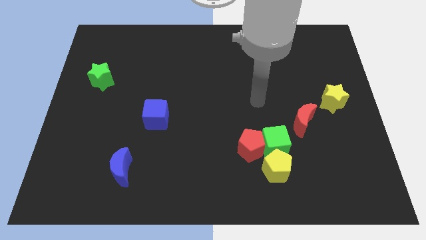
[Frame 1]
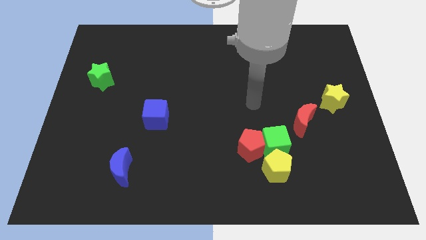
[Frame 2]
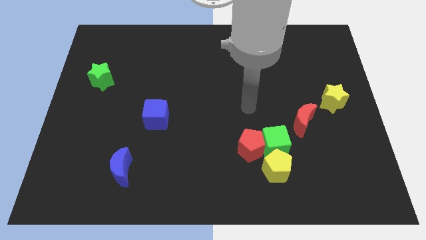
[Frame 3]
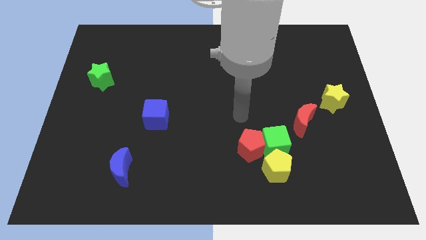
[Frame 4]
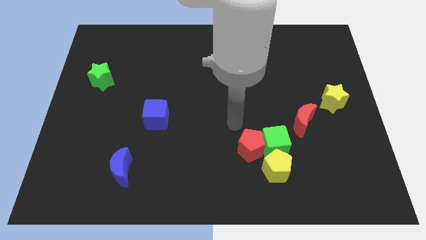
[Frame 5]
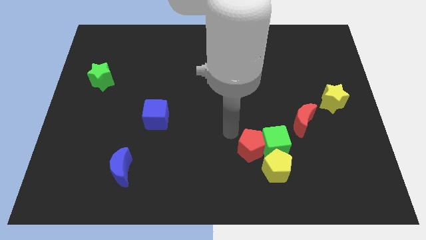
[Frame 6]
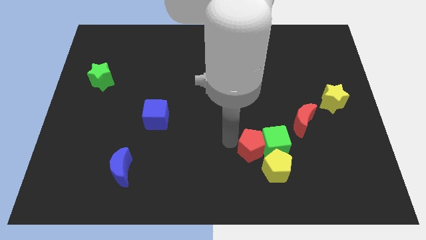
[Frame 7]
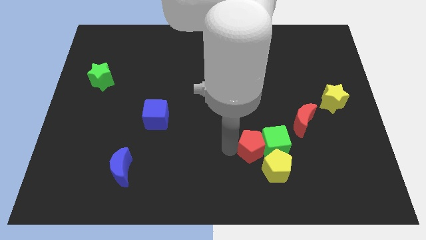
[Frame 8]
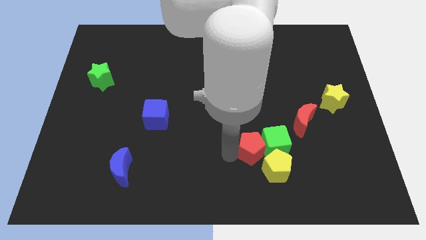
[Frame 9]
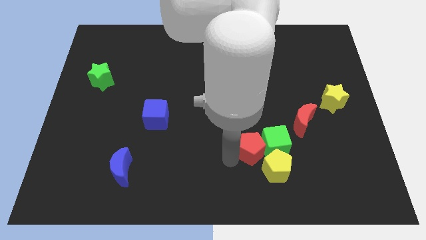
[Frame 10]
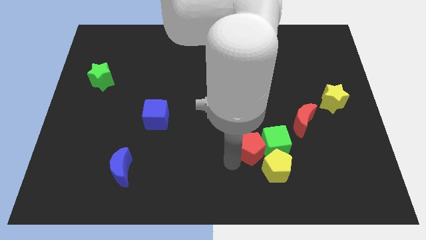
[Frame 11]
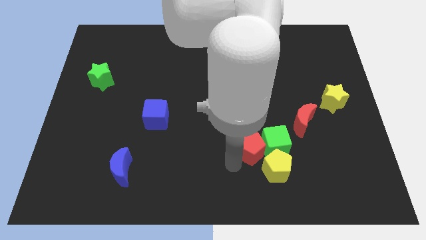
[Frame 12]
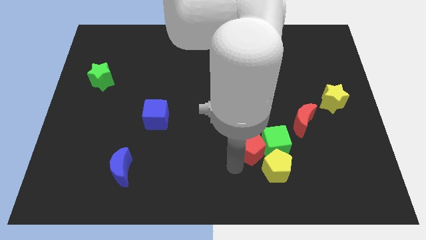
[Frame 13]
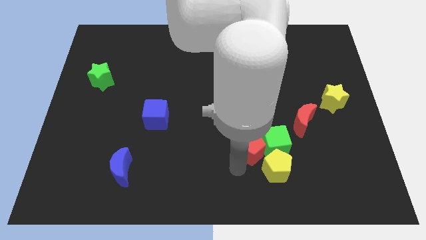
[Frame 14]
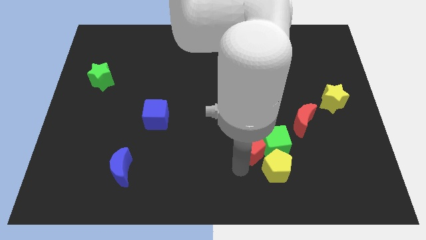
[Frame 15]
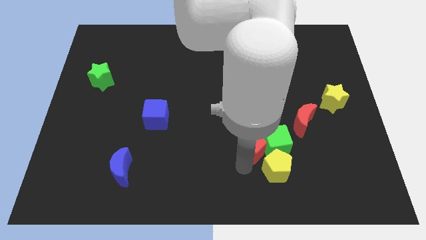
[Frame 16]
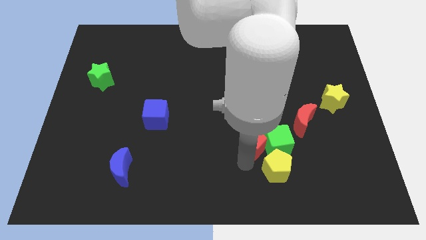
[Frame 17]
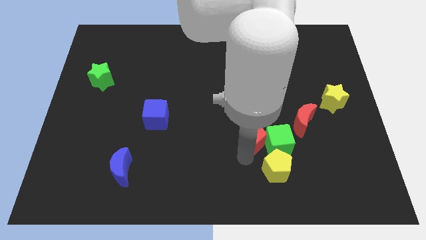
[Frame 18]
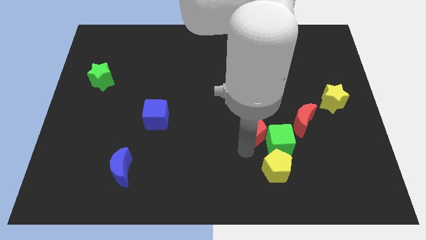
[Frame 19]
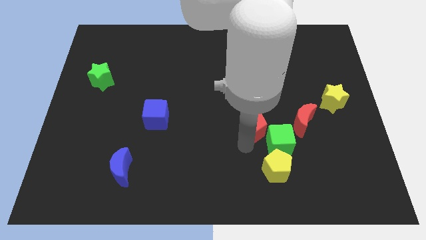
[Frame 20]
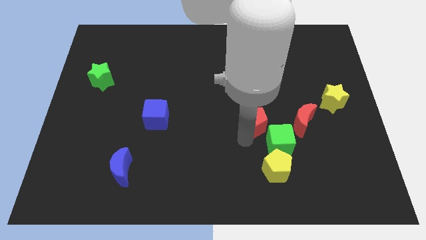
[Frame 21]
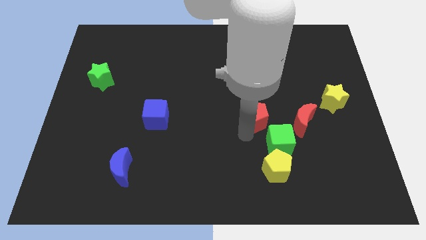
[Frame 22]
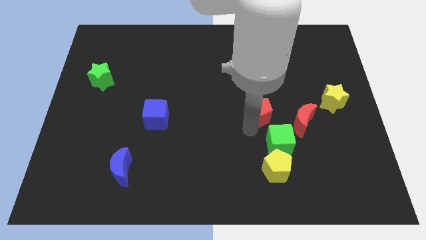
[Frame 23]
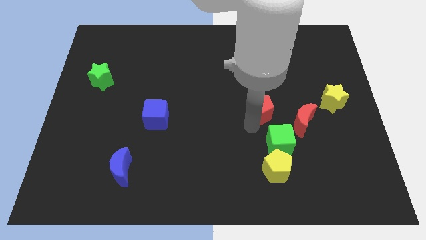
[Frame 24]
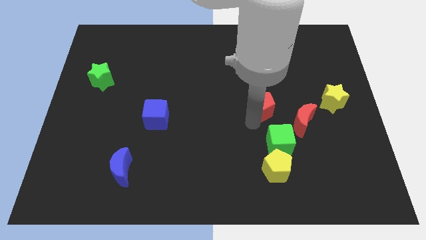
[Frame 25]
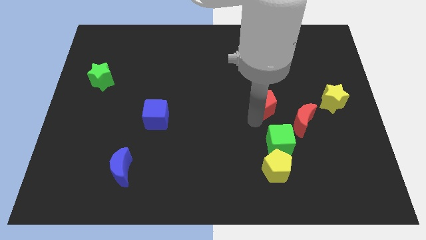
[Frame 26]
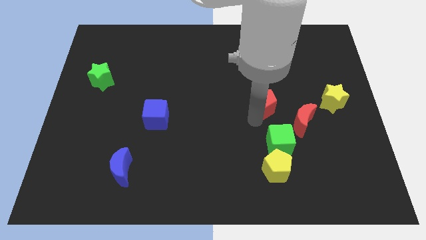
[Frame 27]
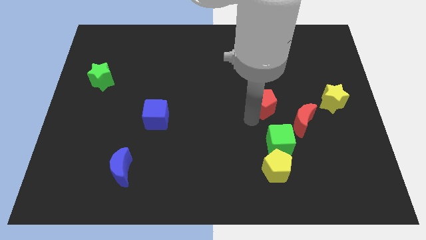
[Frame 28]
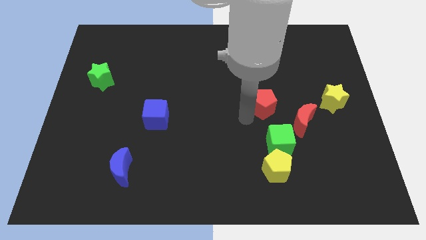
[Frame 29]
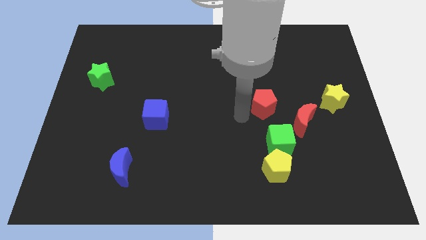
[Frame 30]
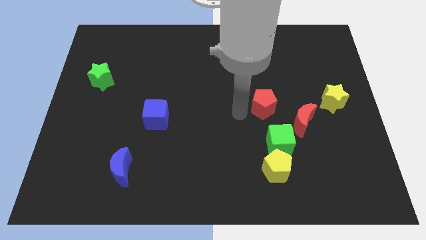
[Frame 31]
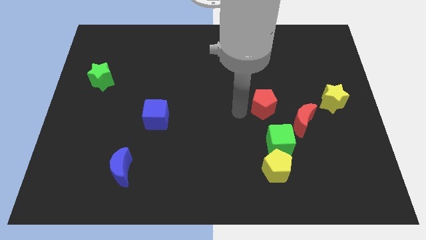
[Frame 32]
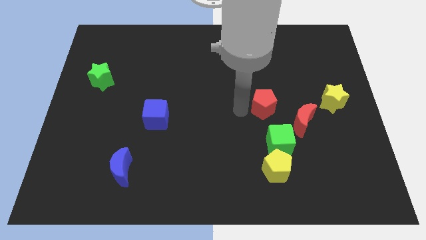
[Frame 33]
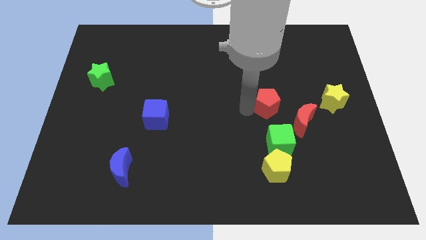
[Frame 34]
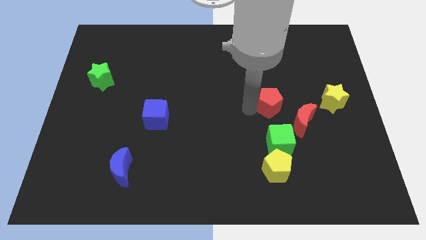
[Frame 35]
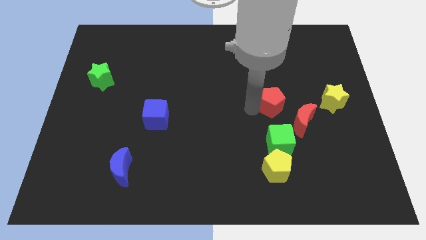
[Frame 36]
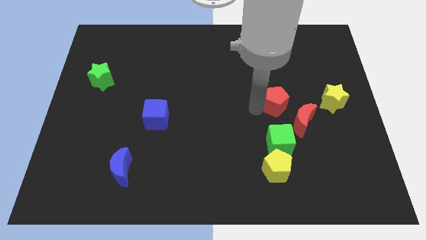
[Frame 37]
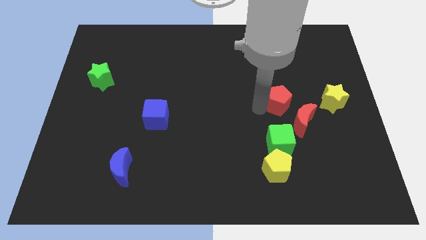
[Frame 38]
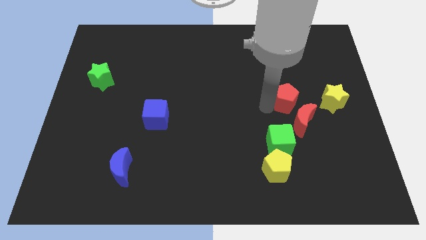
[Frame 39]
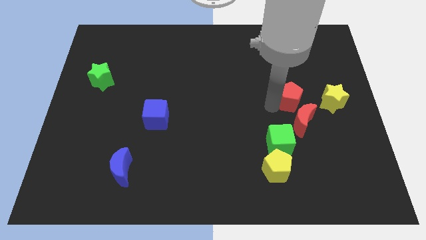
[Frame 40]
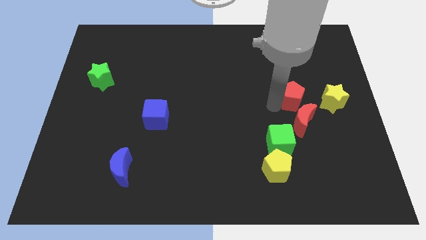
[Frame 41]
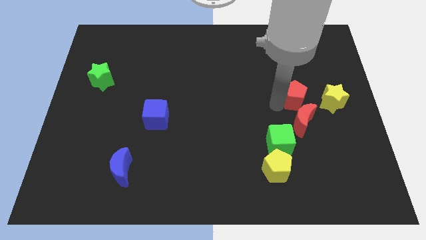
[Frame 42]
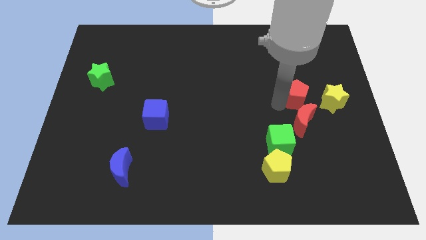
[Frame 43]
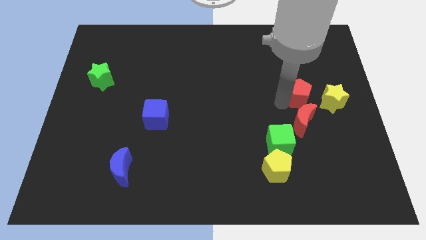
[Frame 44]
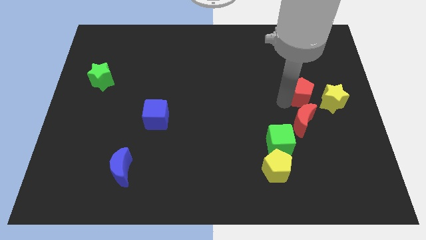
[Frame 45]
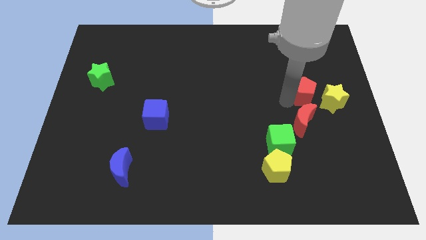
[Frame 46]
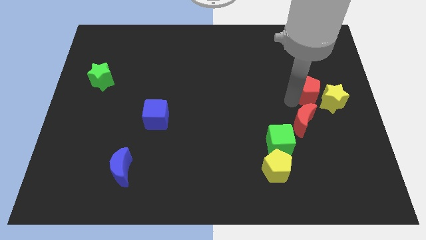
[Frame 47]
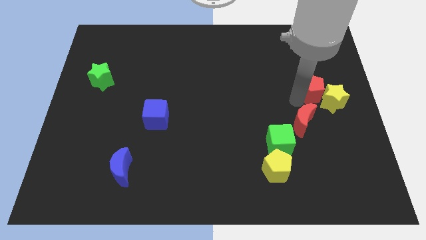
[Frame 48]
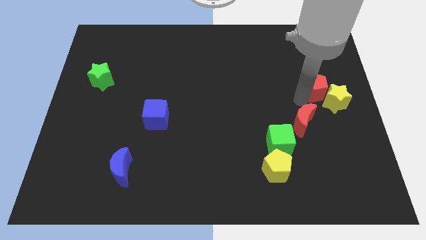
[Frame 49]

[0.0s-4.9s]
slide the red pentagon close to the yellow star

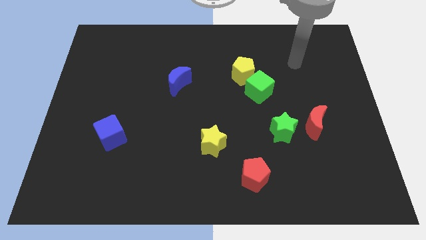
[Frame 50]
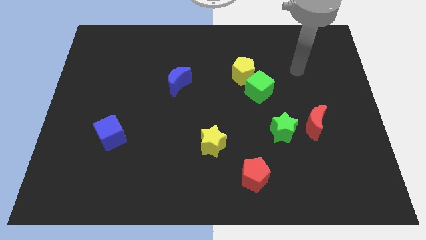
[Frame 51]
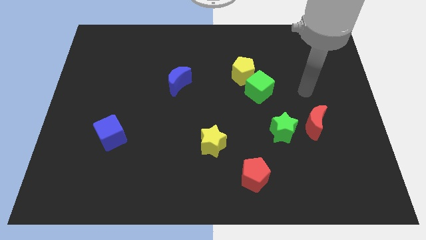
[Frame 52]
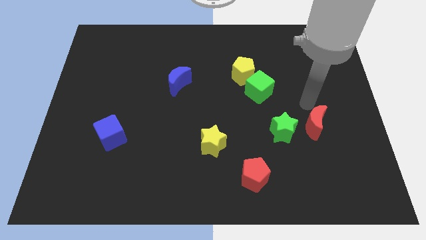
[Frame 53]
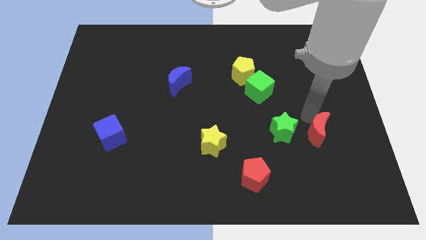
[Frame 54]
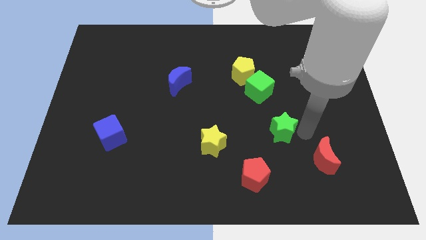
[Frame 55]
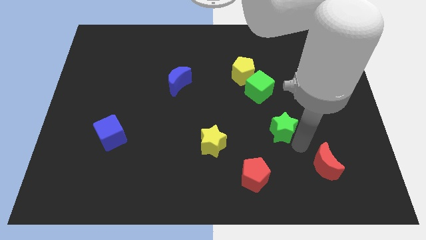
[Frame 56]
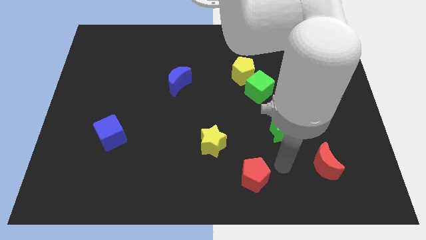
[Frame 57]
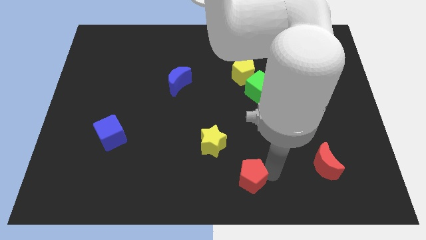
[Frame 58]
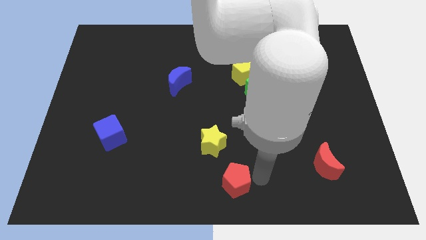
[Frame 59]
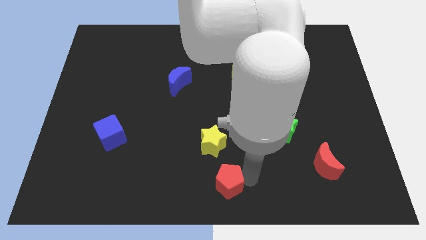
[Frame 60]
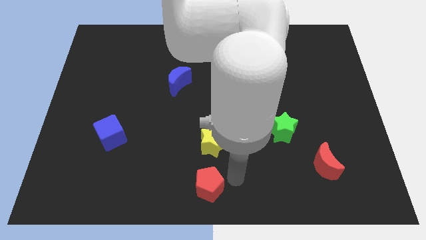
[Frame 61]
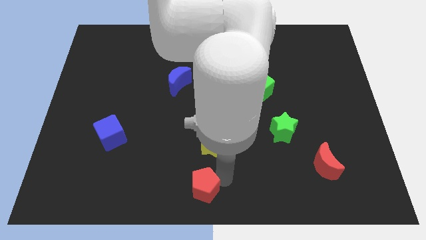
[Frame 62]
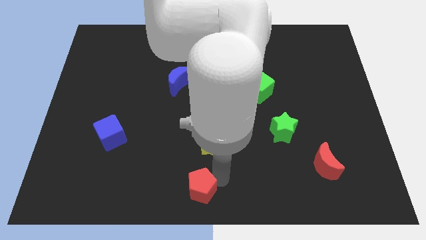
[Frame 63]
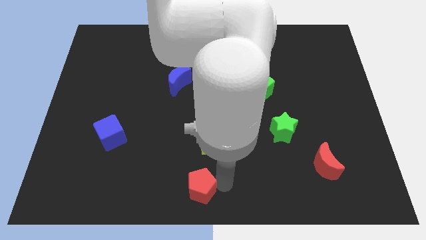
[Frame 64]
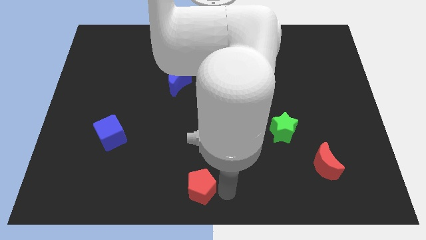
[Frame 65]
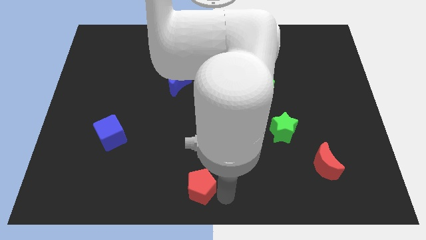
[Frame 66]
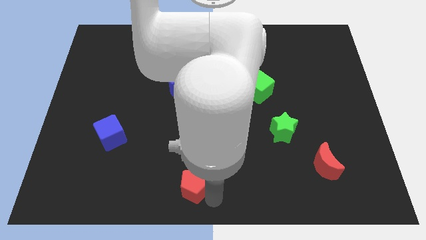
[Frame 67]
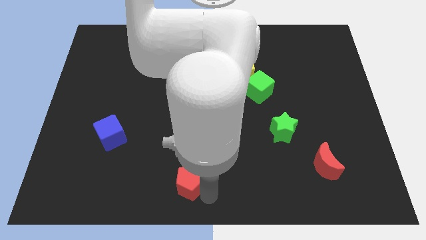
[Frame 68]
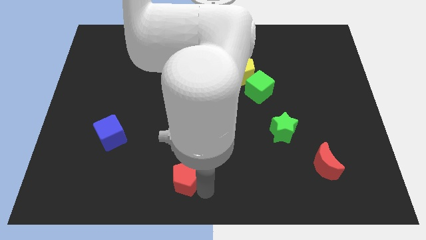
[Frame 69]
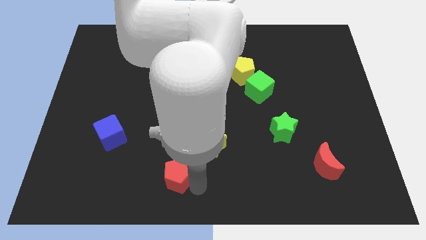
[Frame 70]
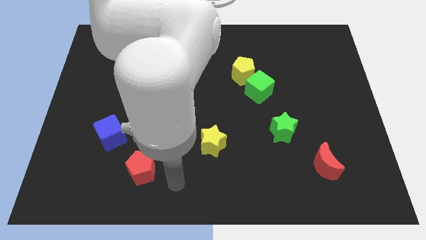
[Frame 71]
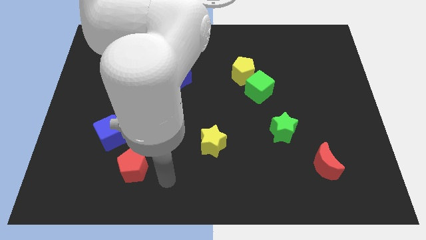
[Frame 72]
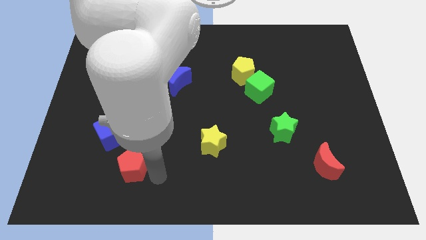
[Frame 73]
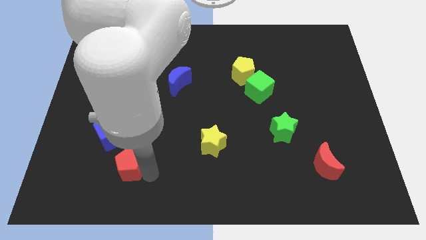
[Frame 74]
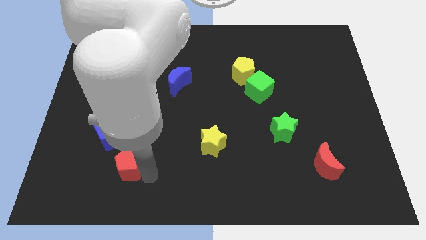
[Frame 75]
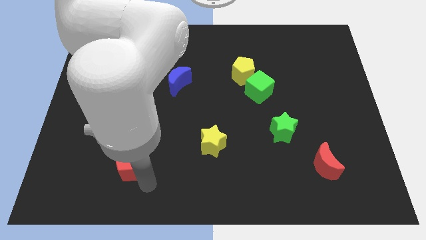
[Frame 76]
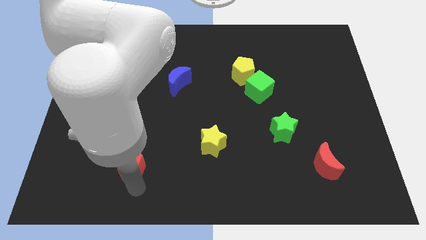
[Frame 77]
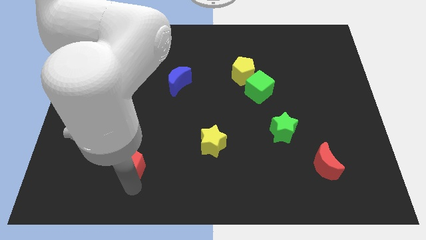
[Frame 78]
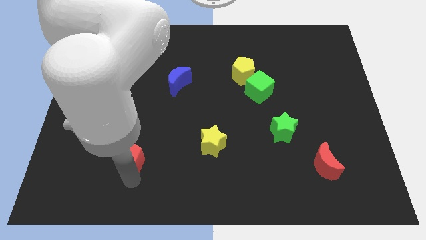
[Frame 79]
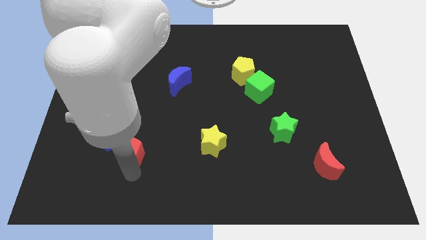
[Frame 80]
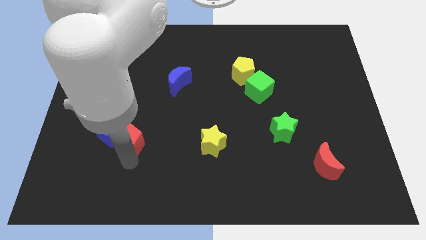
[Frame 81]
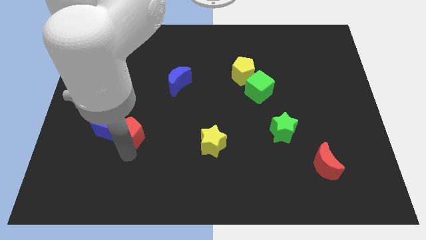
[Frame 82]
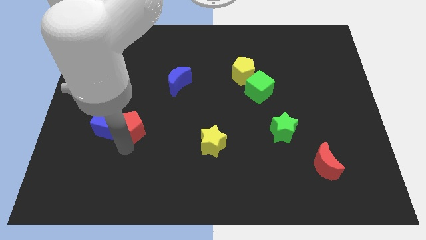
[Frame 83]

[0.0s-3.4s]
put the red pentagon to the blue cube

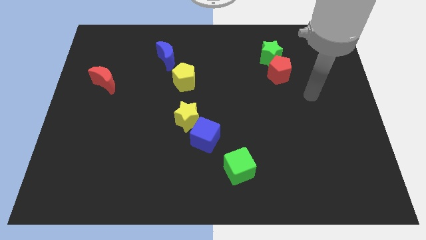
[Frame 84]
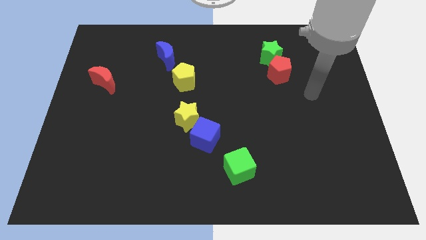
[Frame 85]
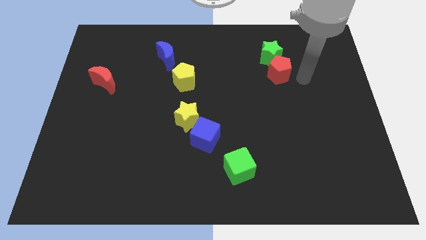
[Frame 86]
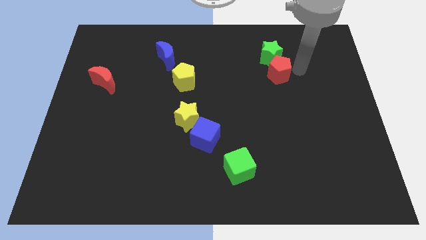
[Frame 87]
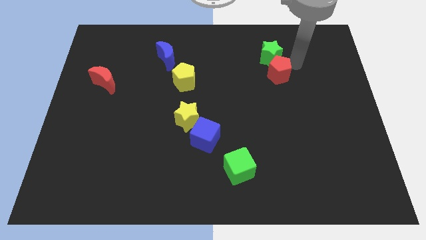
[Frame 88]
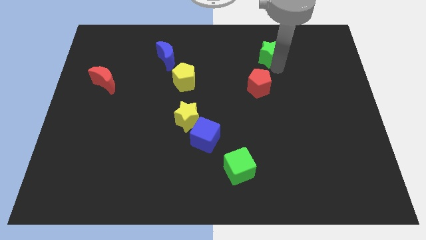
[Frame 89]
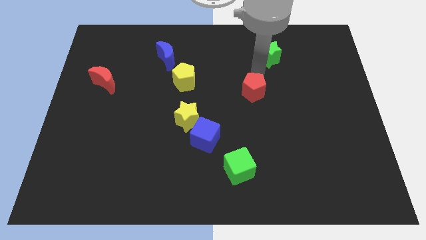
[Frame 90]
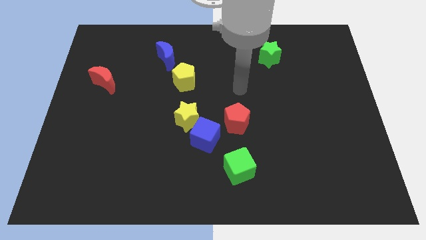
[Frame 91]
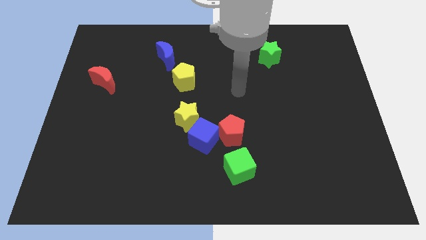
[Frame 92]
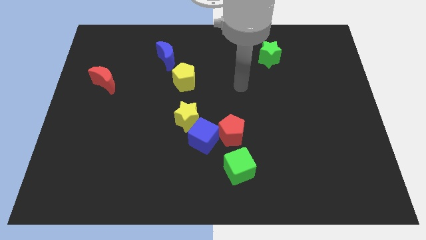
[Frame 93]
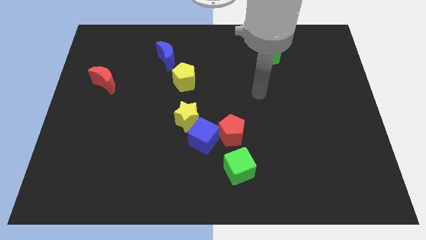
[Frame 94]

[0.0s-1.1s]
move the red pentagon towards the blue cube
